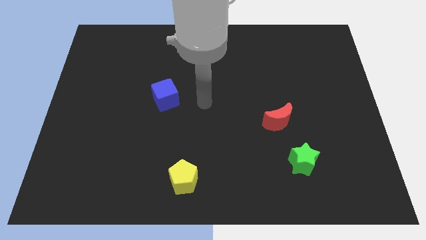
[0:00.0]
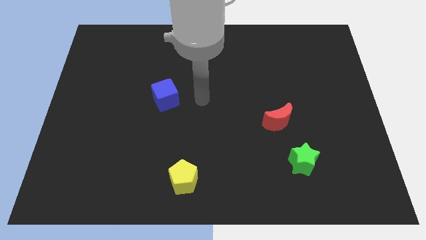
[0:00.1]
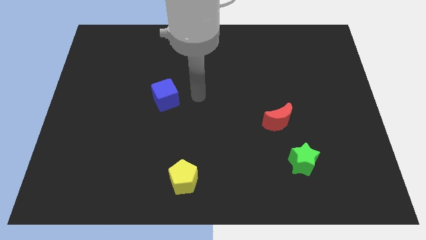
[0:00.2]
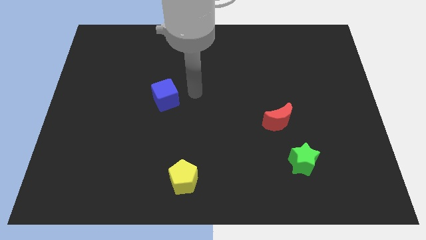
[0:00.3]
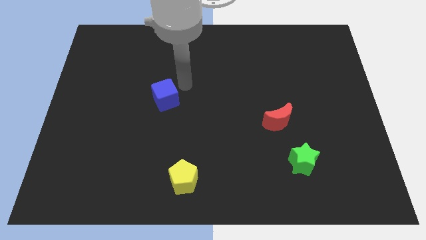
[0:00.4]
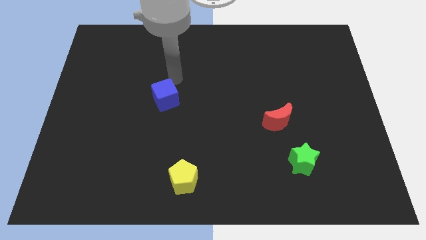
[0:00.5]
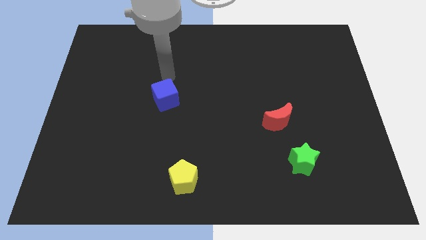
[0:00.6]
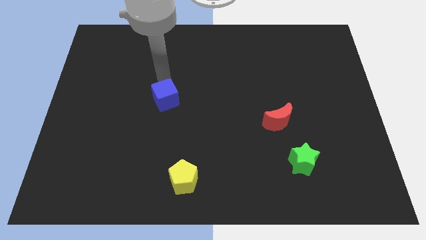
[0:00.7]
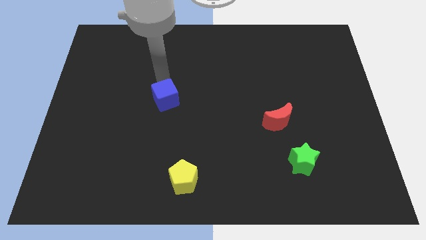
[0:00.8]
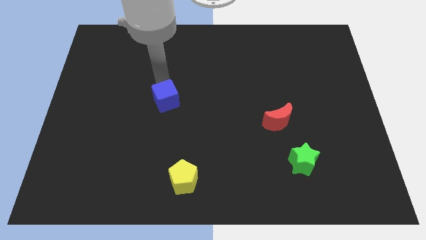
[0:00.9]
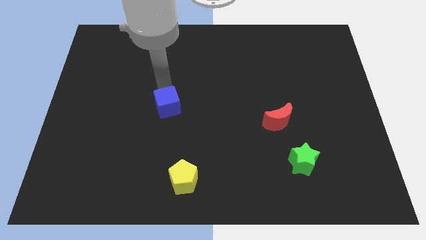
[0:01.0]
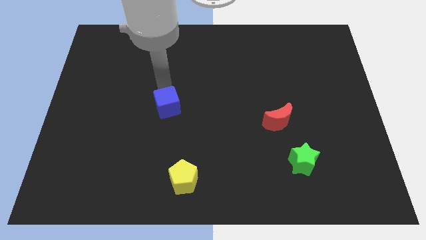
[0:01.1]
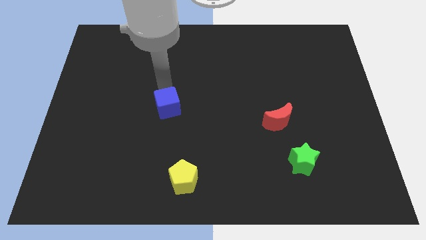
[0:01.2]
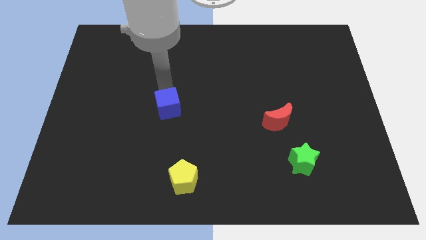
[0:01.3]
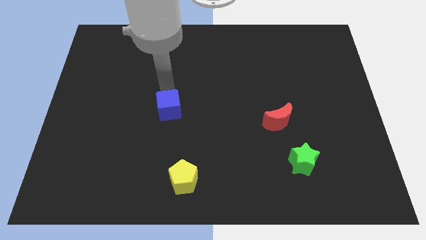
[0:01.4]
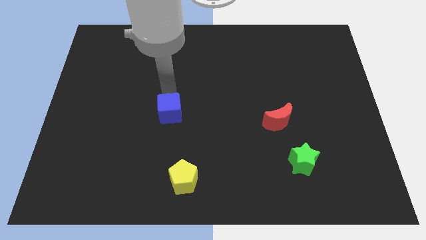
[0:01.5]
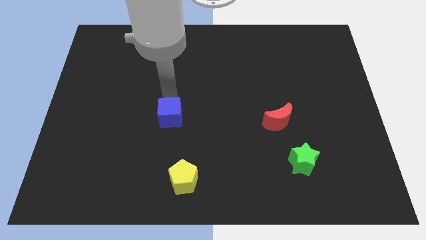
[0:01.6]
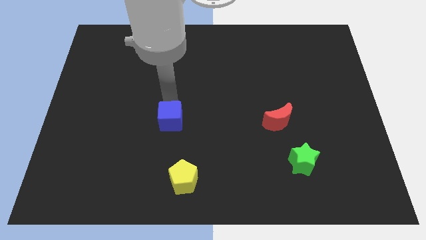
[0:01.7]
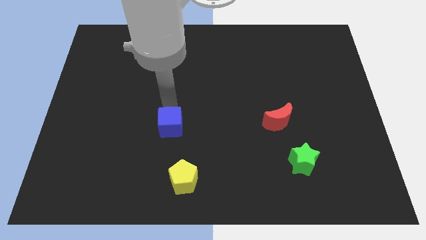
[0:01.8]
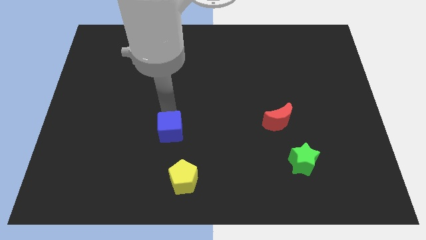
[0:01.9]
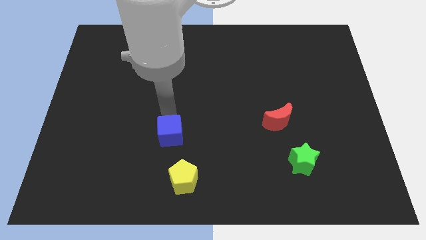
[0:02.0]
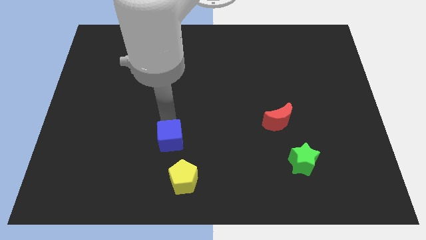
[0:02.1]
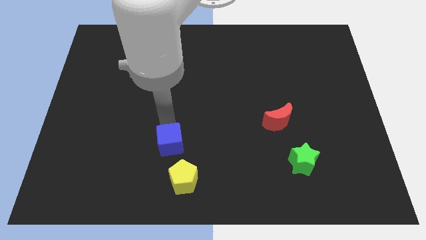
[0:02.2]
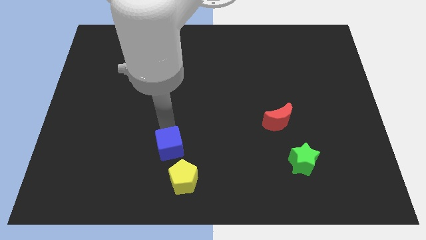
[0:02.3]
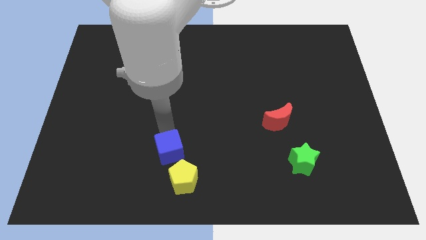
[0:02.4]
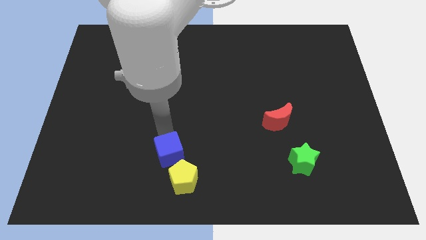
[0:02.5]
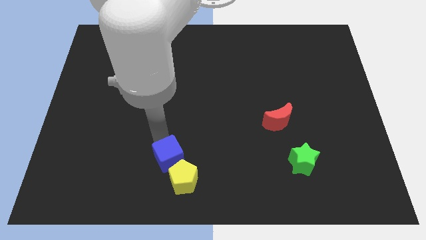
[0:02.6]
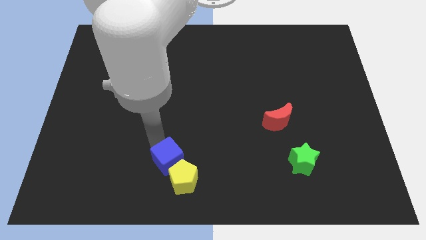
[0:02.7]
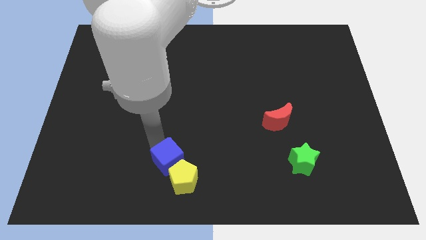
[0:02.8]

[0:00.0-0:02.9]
move the blue cube to the yellow block

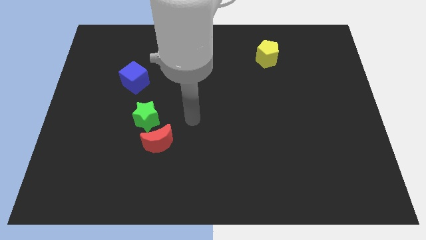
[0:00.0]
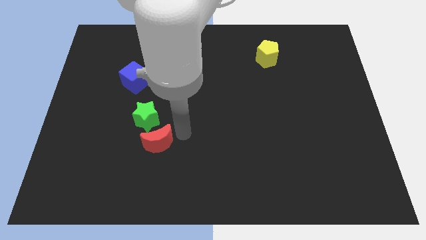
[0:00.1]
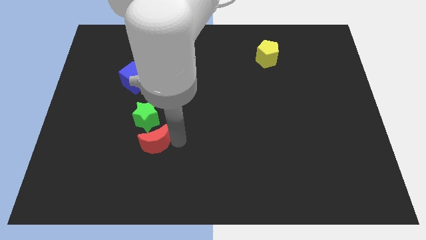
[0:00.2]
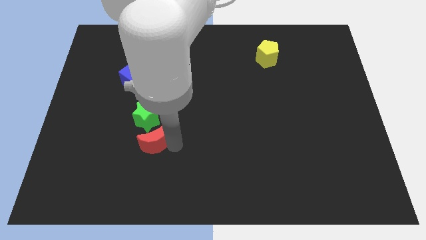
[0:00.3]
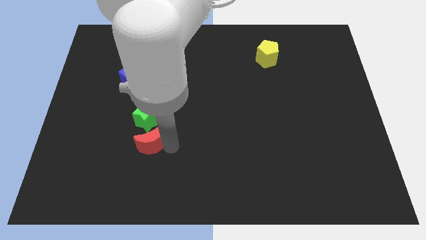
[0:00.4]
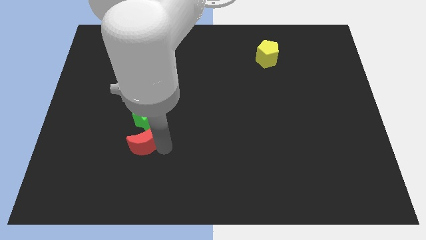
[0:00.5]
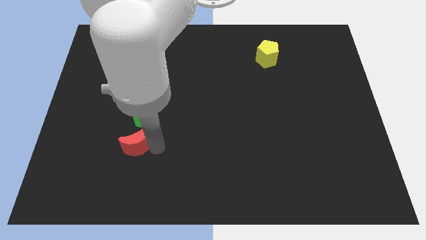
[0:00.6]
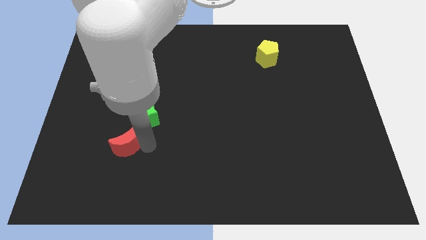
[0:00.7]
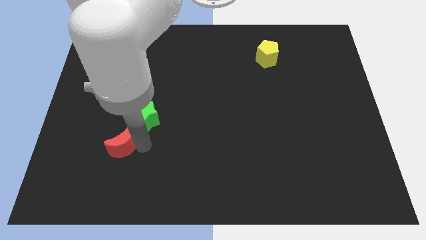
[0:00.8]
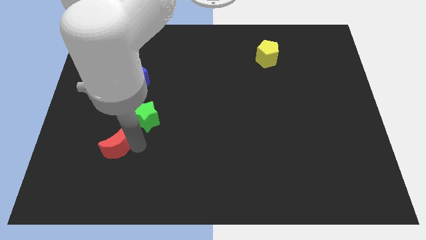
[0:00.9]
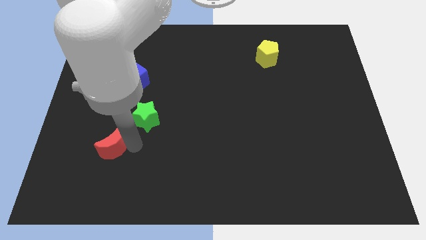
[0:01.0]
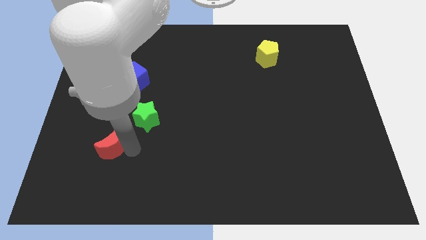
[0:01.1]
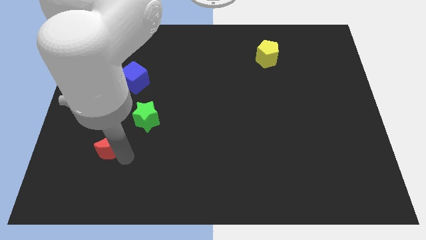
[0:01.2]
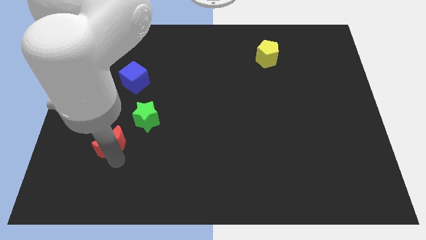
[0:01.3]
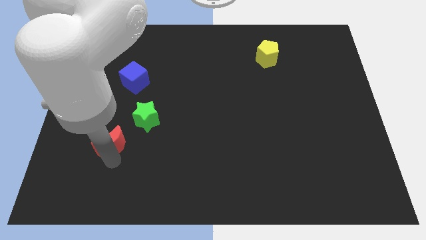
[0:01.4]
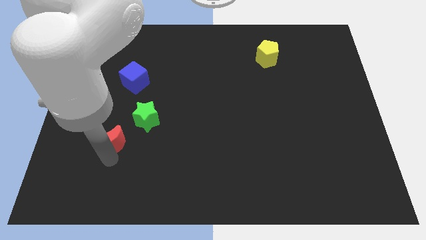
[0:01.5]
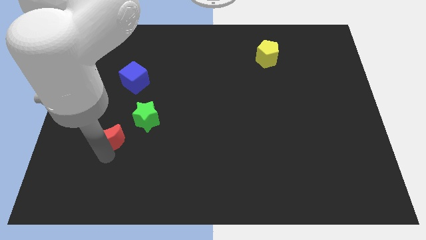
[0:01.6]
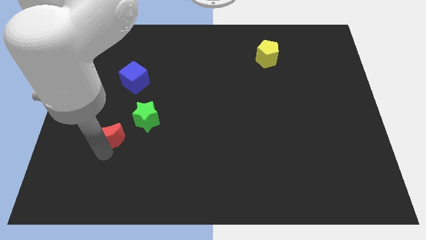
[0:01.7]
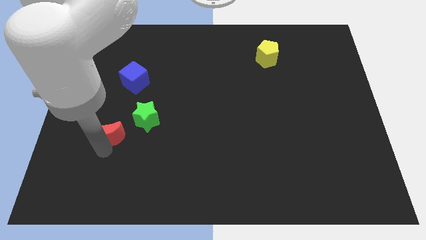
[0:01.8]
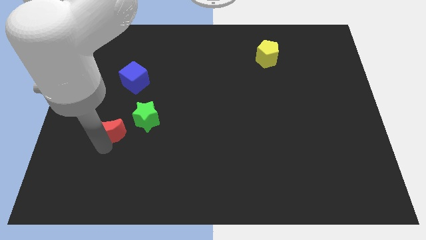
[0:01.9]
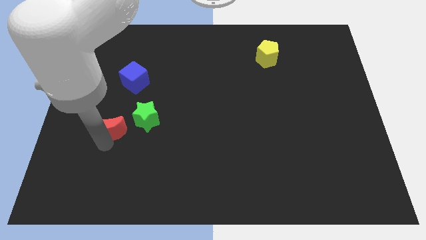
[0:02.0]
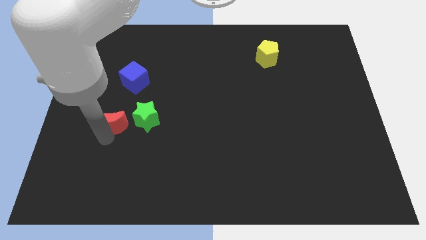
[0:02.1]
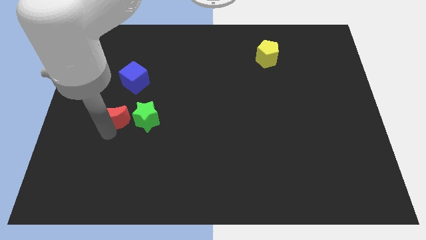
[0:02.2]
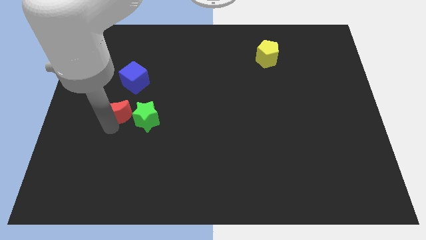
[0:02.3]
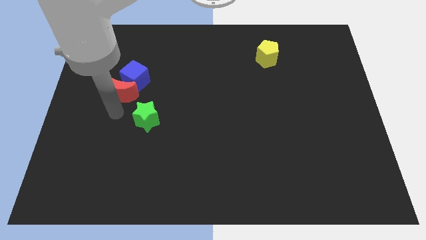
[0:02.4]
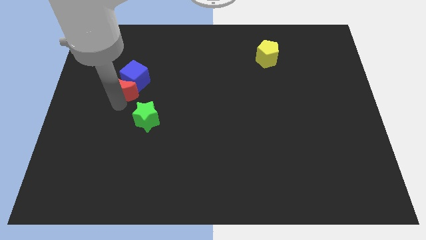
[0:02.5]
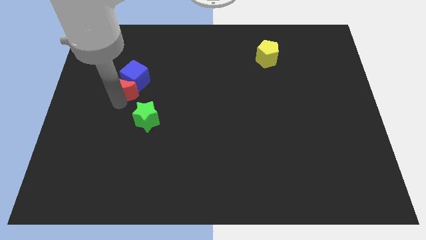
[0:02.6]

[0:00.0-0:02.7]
move the red block close to the cube

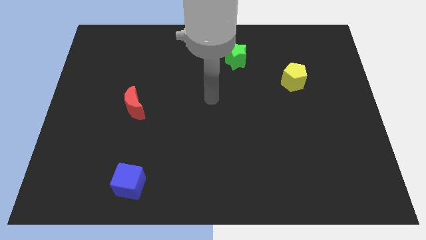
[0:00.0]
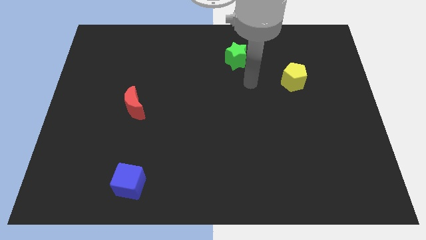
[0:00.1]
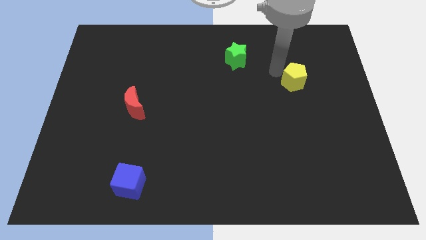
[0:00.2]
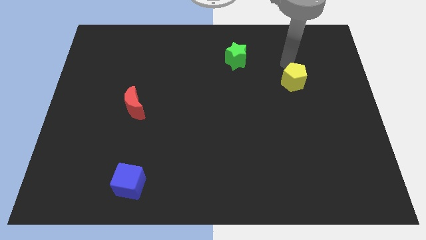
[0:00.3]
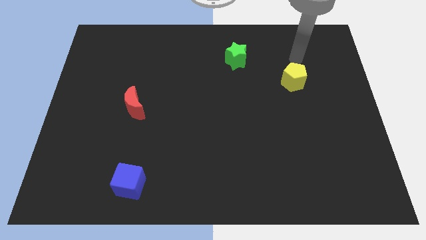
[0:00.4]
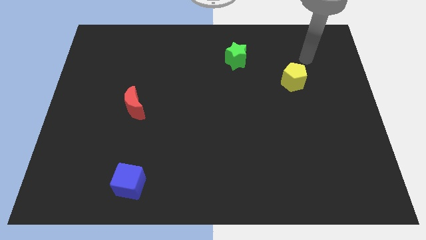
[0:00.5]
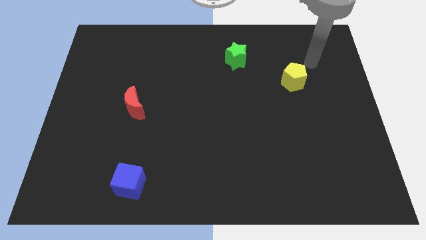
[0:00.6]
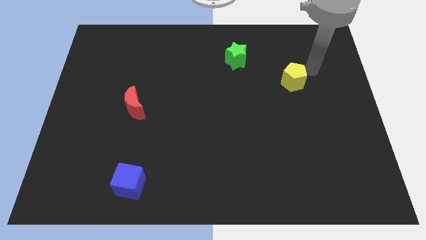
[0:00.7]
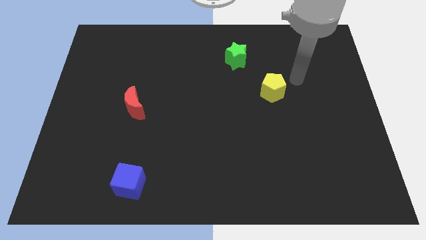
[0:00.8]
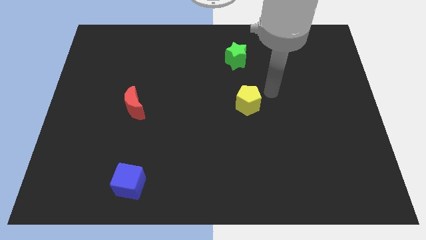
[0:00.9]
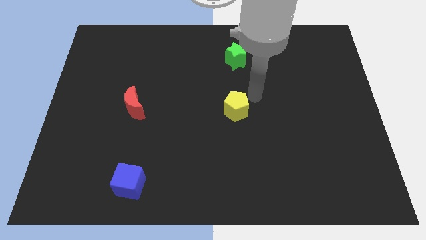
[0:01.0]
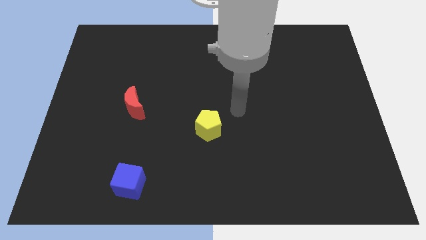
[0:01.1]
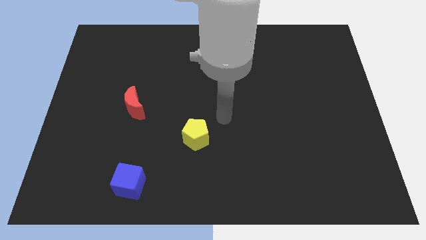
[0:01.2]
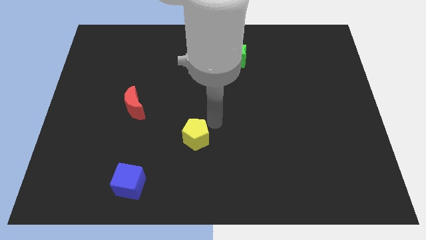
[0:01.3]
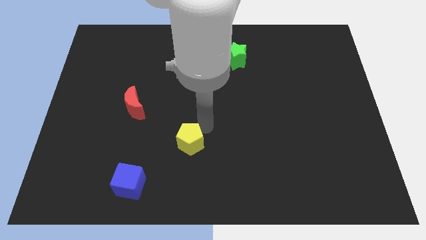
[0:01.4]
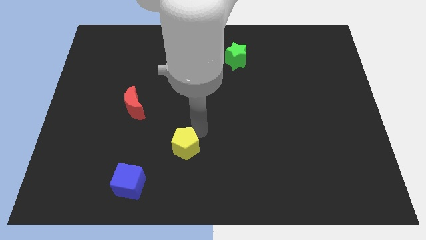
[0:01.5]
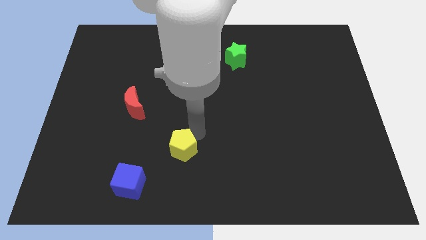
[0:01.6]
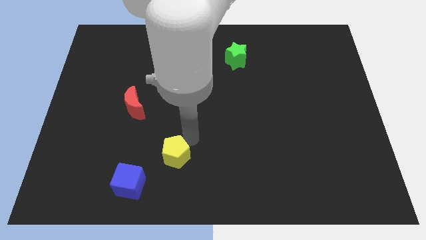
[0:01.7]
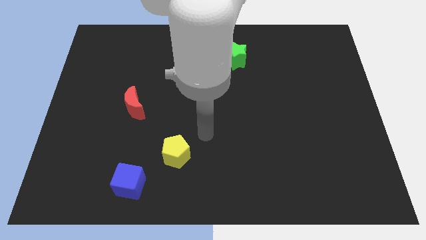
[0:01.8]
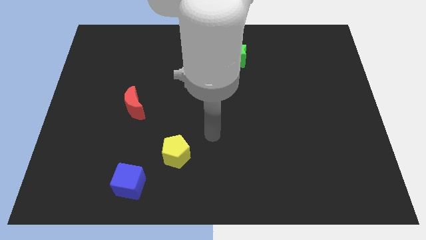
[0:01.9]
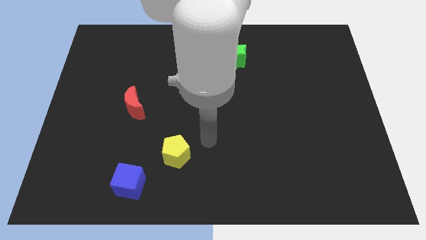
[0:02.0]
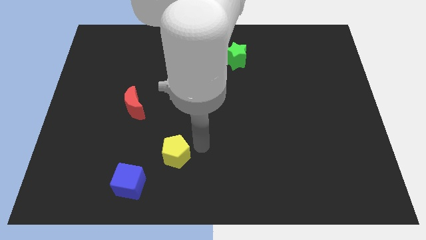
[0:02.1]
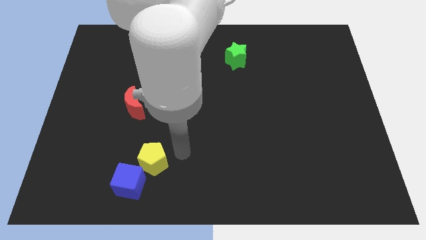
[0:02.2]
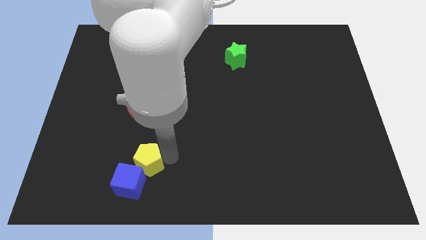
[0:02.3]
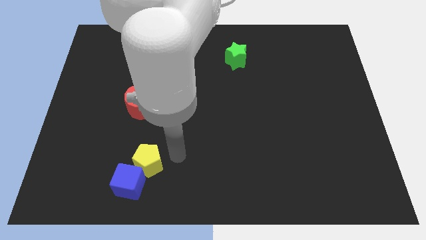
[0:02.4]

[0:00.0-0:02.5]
move the yellow pentagon next to the blue cube

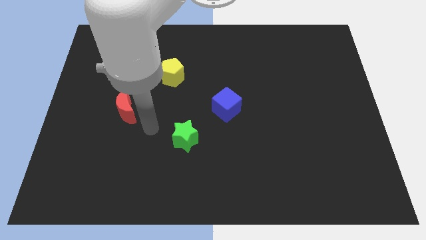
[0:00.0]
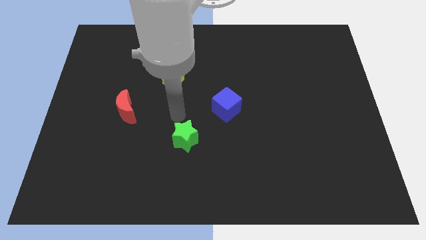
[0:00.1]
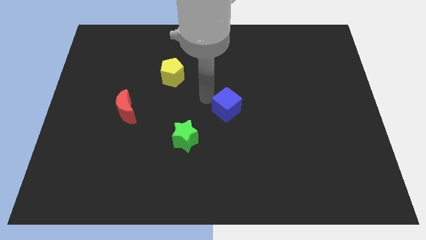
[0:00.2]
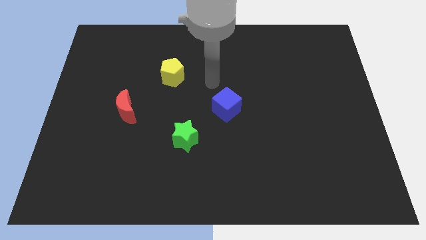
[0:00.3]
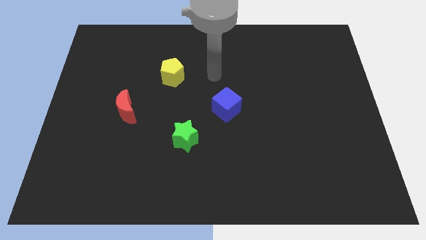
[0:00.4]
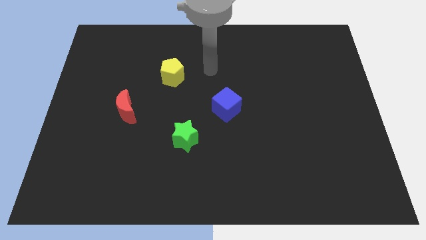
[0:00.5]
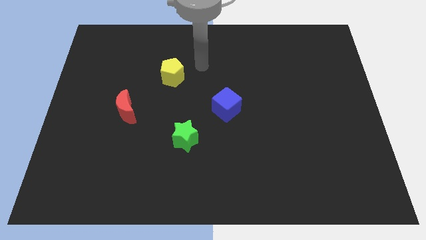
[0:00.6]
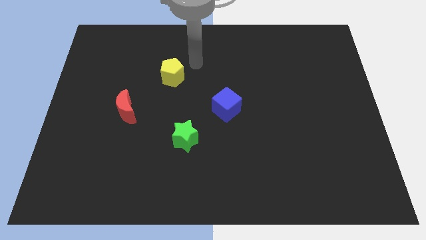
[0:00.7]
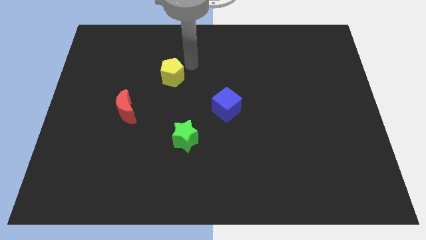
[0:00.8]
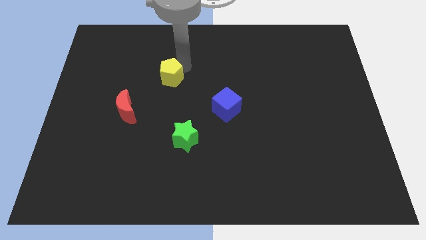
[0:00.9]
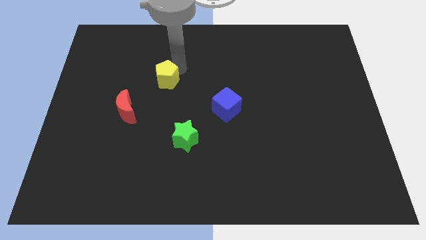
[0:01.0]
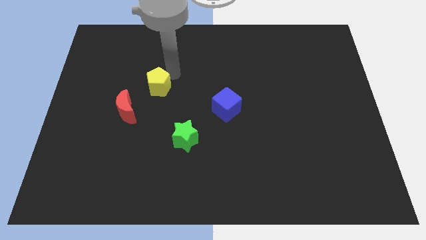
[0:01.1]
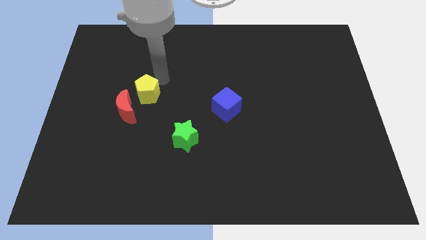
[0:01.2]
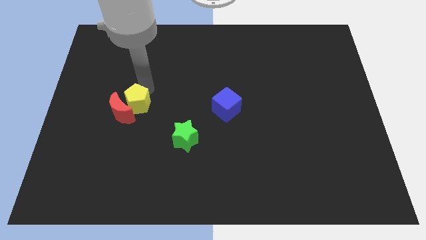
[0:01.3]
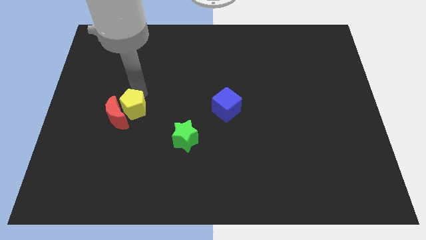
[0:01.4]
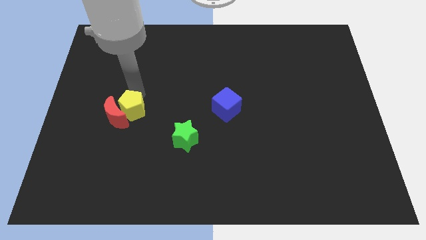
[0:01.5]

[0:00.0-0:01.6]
put the yellow pentagon next to the red moon
